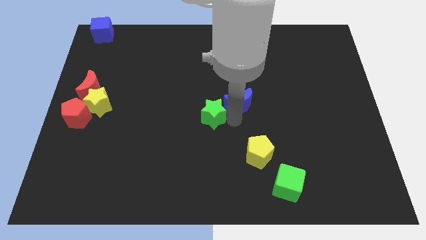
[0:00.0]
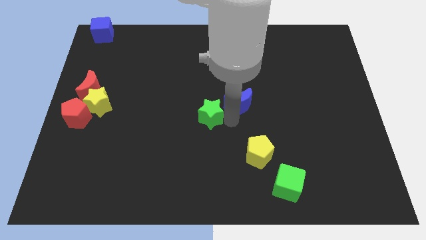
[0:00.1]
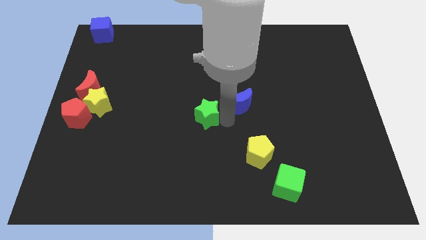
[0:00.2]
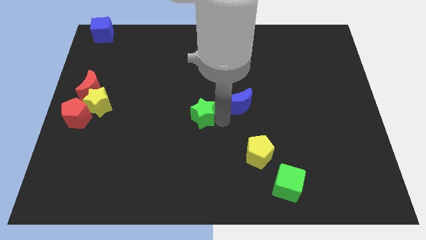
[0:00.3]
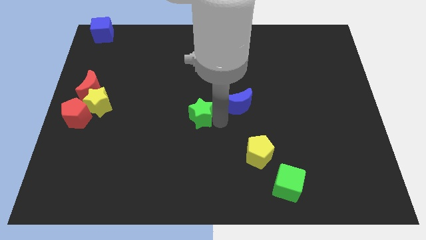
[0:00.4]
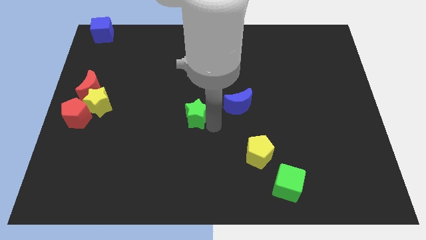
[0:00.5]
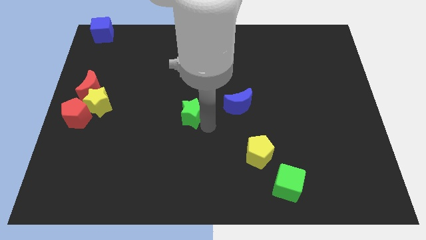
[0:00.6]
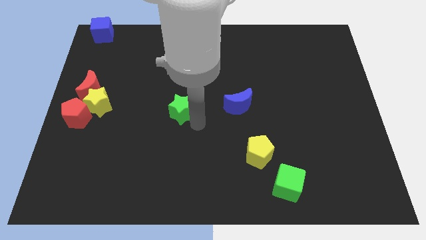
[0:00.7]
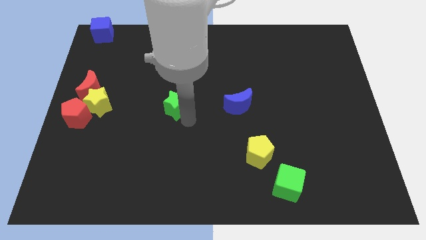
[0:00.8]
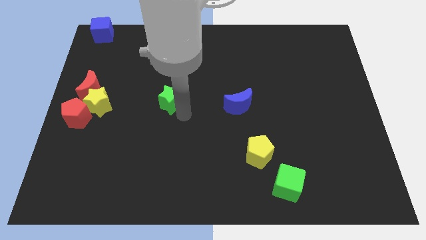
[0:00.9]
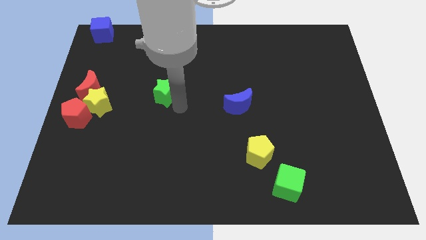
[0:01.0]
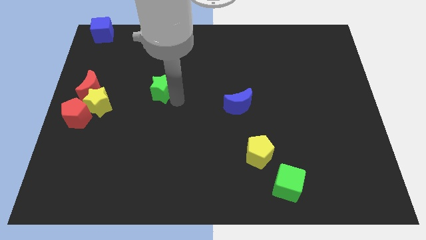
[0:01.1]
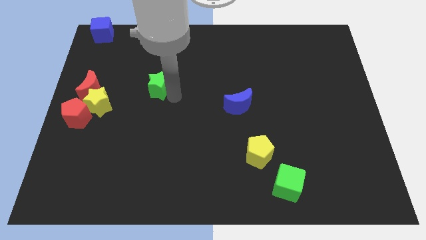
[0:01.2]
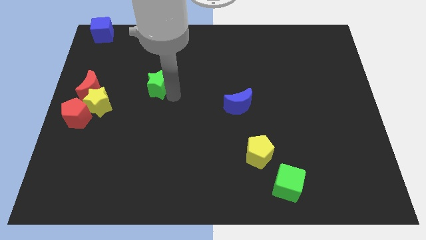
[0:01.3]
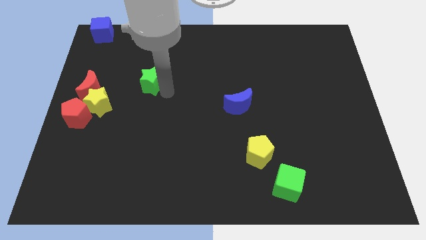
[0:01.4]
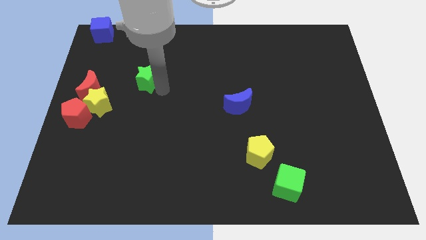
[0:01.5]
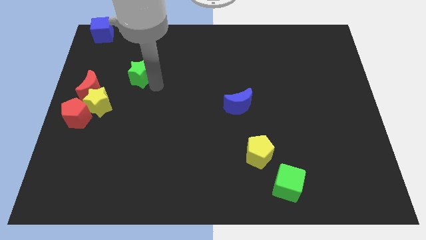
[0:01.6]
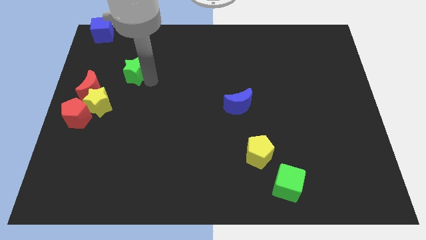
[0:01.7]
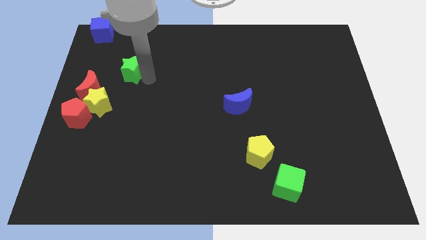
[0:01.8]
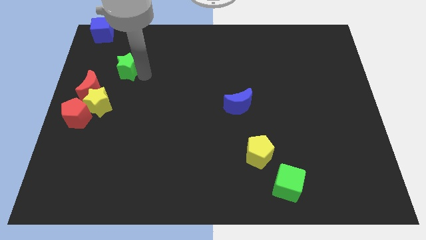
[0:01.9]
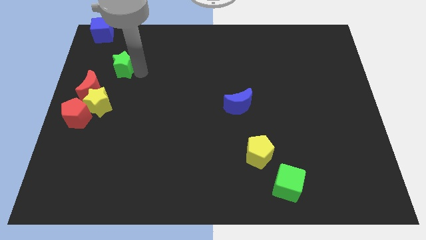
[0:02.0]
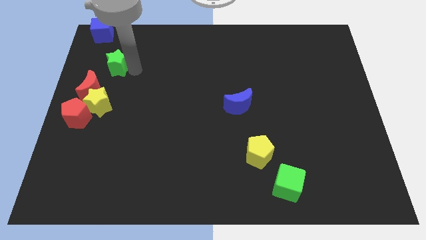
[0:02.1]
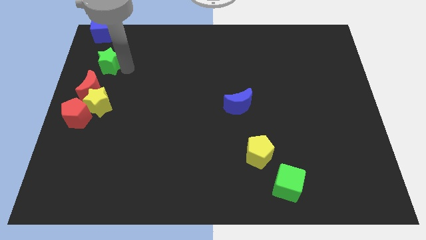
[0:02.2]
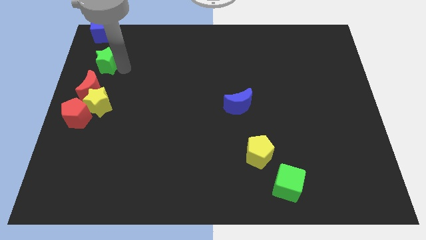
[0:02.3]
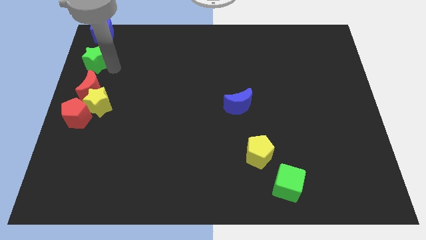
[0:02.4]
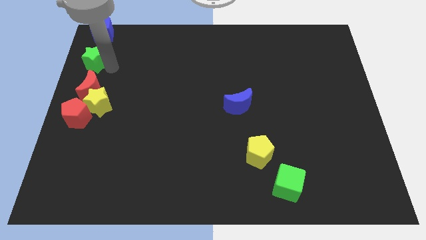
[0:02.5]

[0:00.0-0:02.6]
move the green star to the top of the red crescent

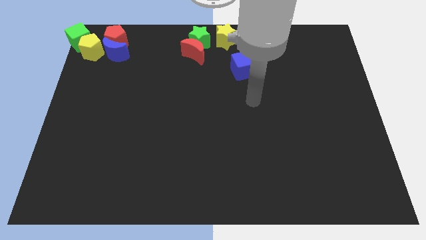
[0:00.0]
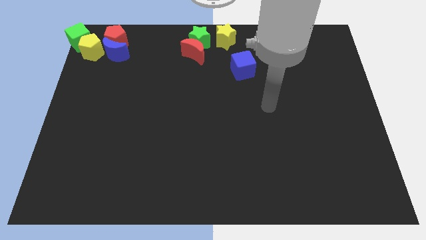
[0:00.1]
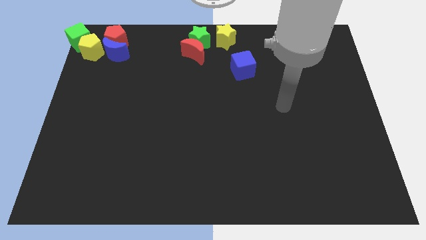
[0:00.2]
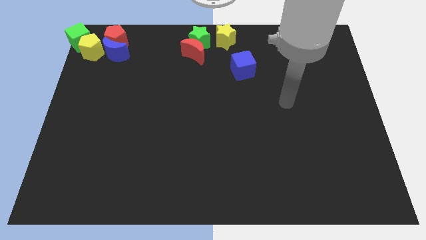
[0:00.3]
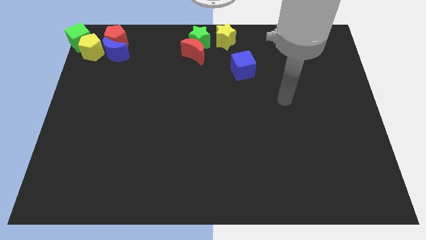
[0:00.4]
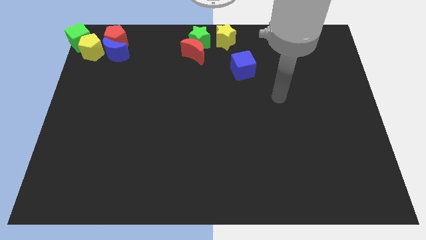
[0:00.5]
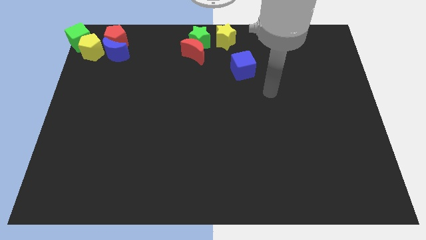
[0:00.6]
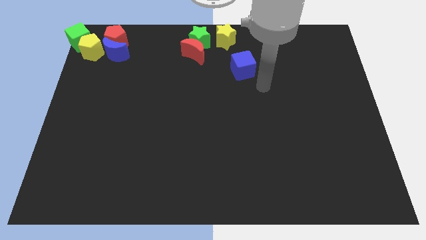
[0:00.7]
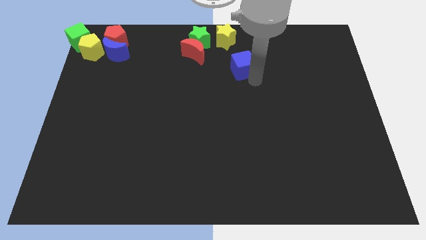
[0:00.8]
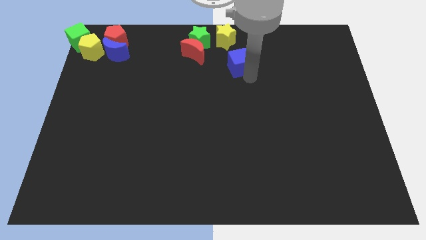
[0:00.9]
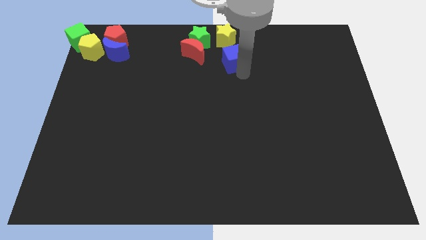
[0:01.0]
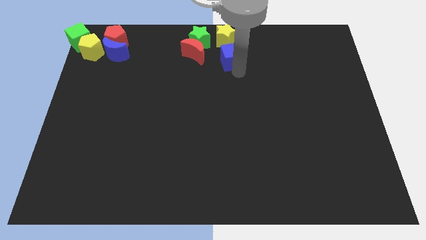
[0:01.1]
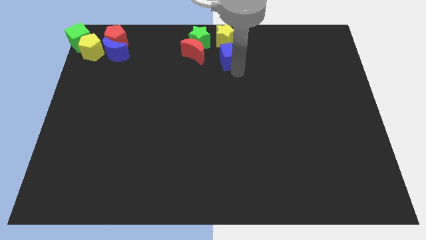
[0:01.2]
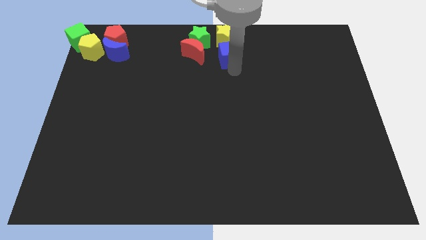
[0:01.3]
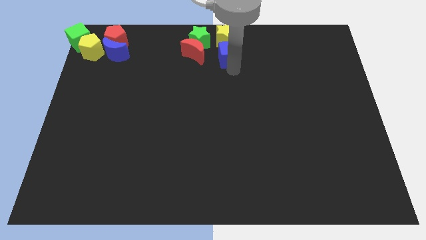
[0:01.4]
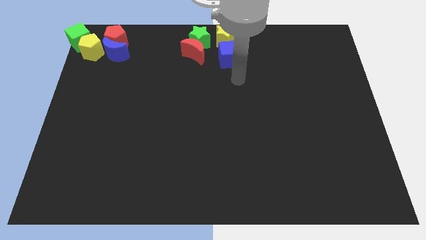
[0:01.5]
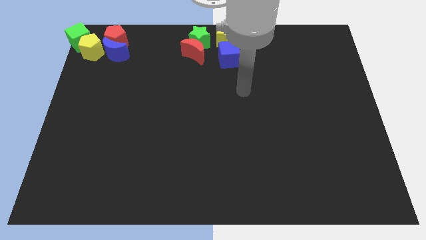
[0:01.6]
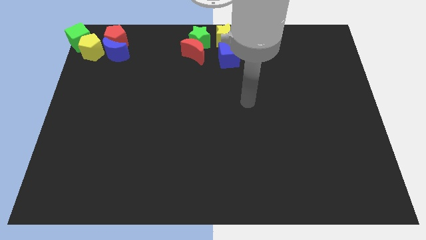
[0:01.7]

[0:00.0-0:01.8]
place a blue cube to the bottom of the yellow star

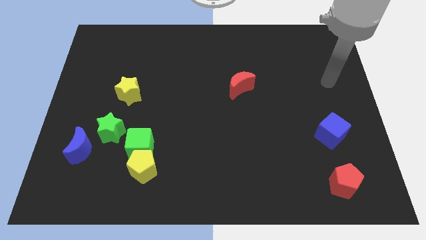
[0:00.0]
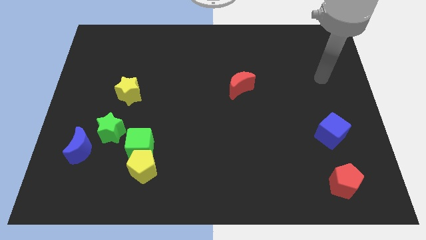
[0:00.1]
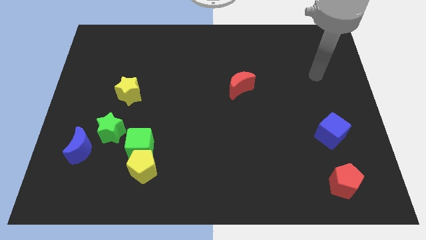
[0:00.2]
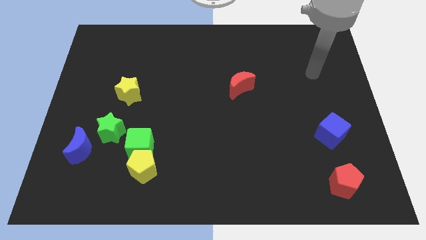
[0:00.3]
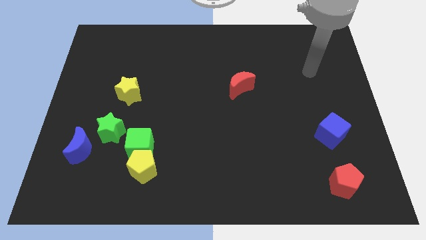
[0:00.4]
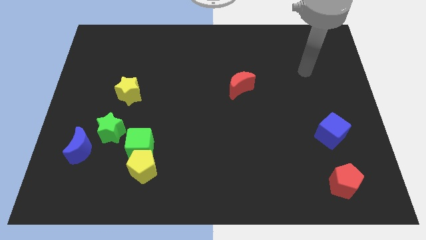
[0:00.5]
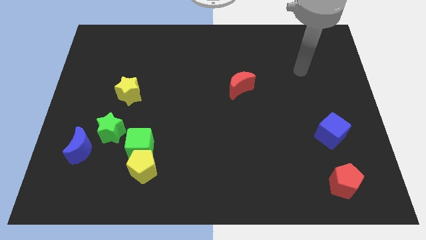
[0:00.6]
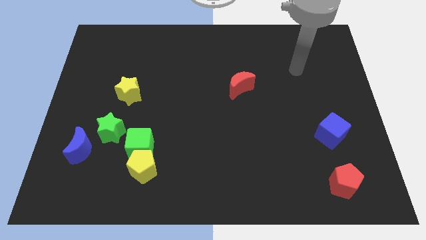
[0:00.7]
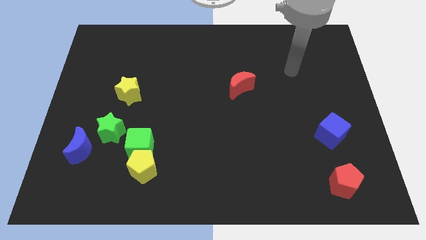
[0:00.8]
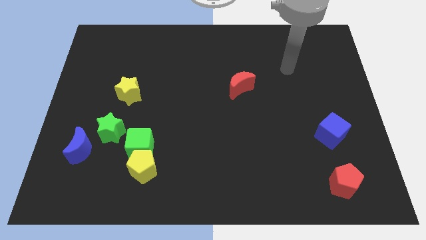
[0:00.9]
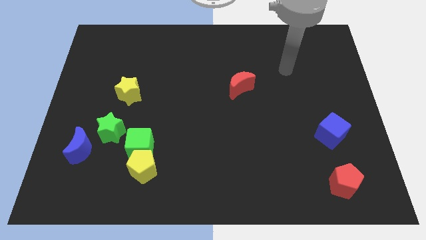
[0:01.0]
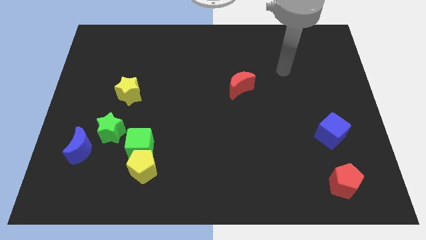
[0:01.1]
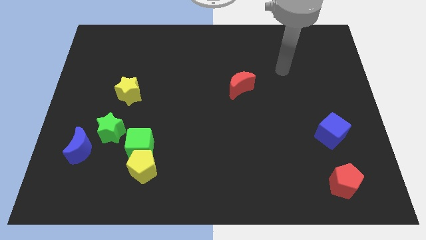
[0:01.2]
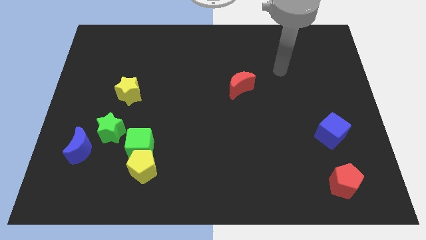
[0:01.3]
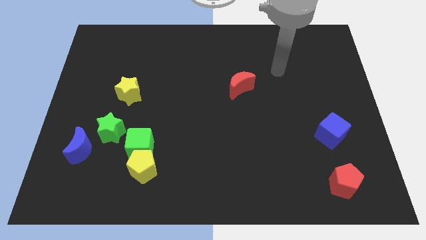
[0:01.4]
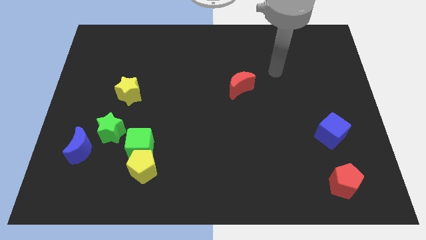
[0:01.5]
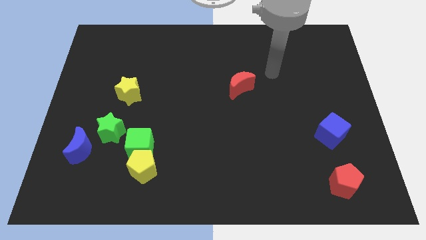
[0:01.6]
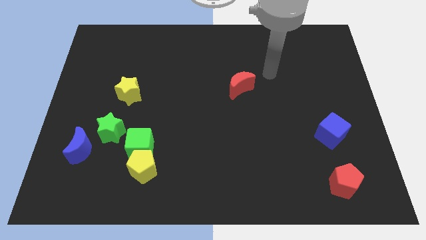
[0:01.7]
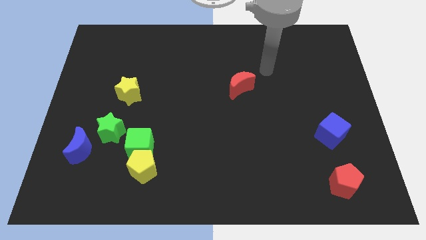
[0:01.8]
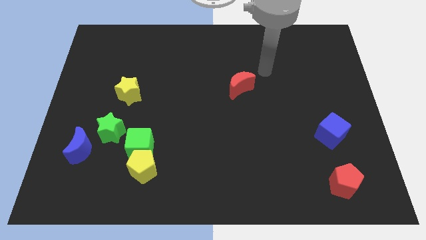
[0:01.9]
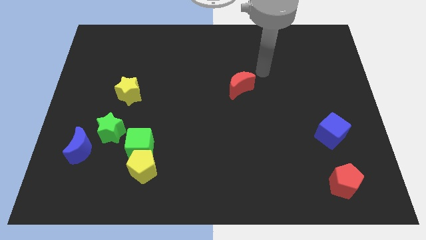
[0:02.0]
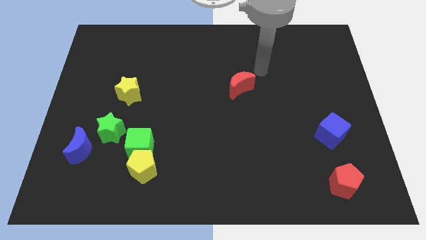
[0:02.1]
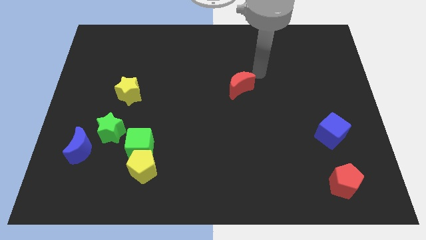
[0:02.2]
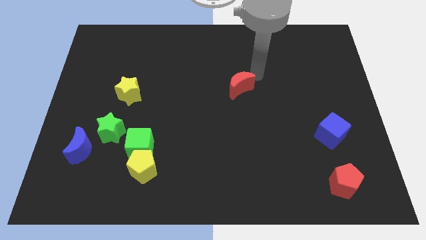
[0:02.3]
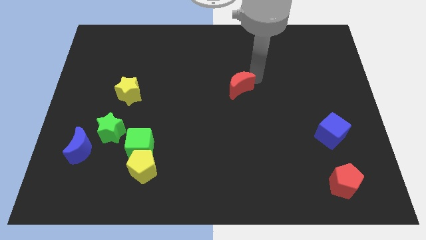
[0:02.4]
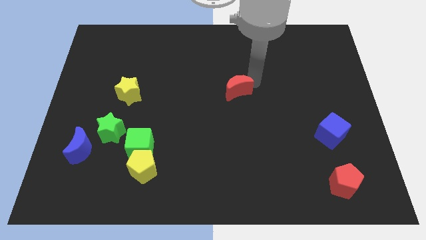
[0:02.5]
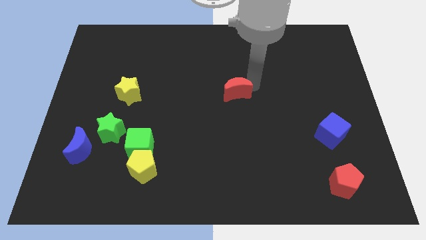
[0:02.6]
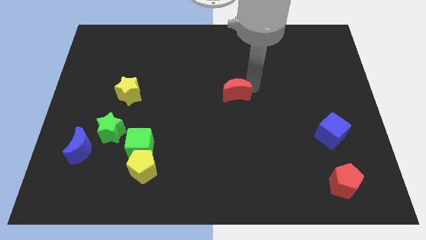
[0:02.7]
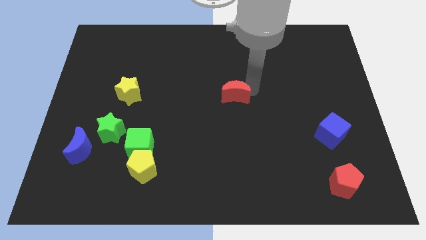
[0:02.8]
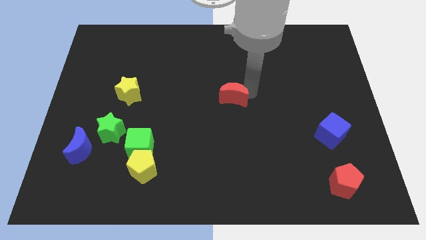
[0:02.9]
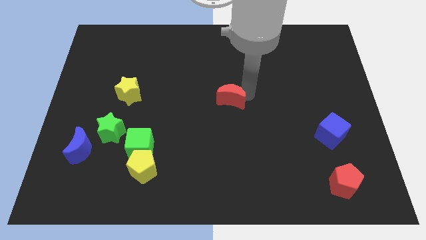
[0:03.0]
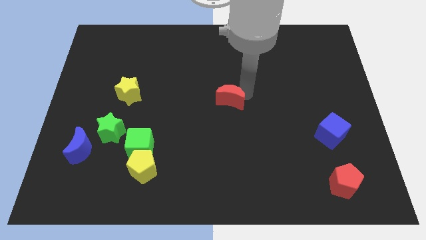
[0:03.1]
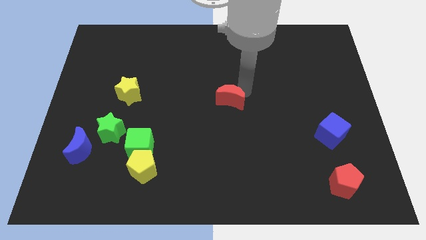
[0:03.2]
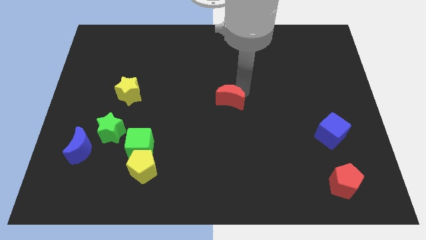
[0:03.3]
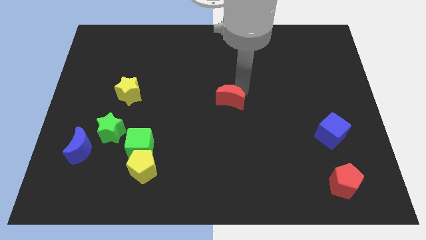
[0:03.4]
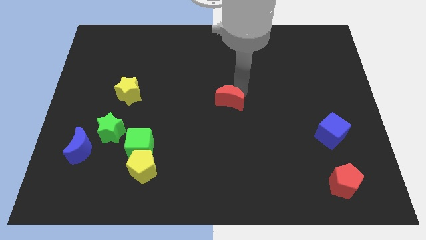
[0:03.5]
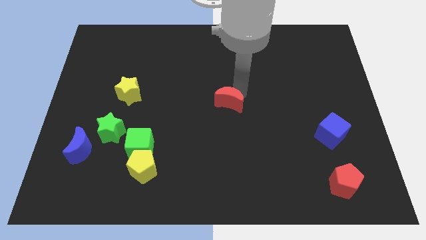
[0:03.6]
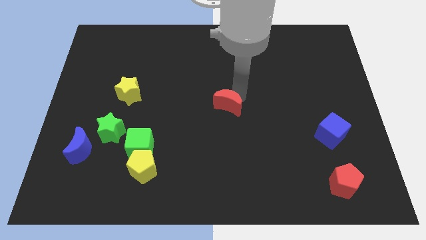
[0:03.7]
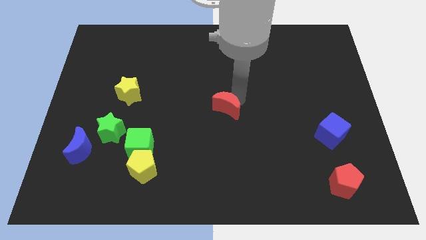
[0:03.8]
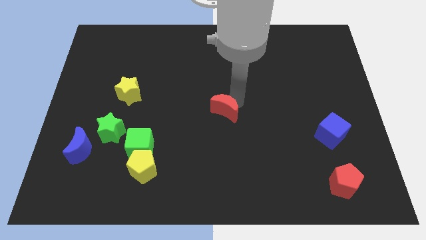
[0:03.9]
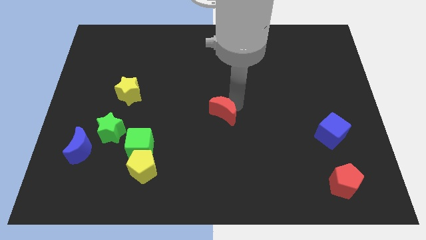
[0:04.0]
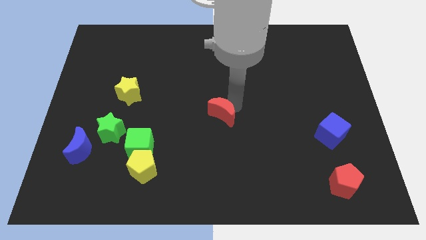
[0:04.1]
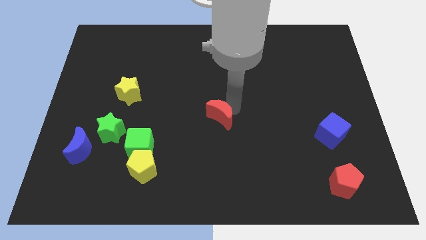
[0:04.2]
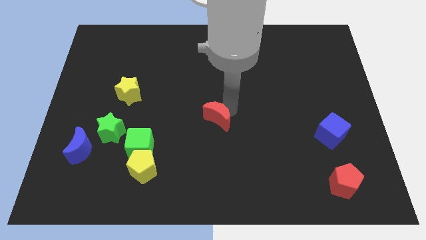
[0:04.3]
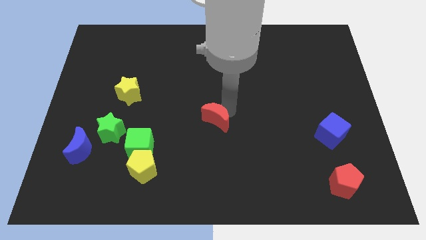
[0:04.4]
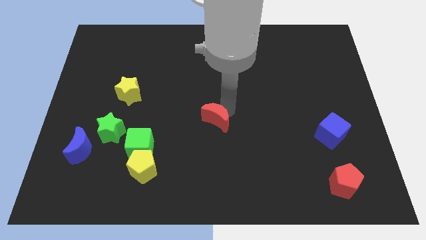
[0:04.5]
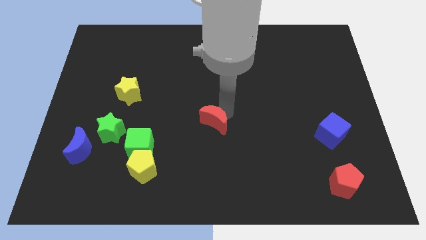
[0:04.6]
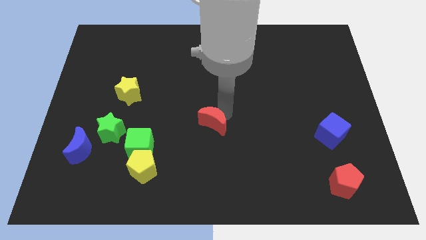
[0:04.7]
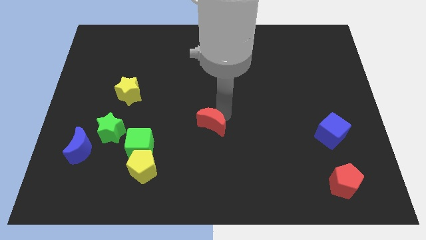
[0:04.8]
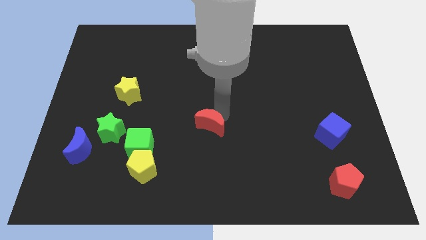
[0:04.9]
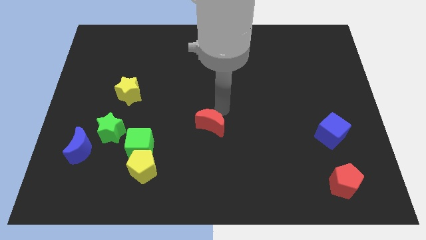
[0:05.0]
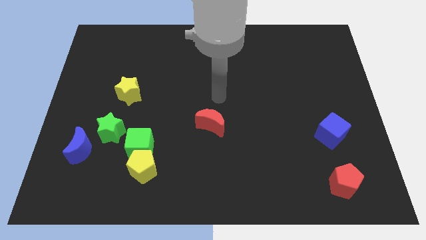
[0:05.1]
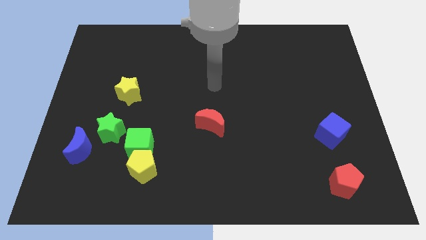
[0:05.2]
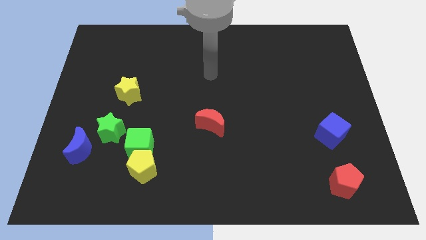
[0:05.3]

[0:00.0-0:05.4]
place the red crescent at the top right side of the green cube
